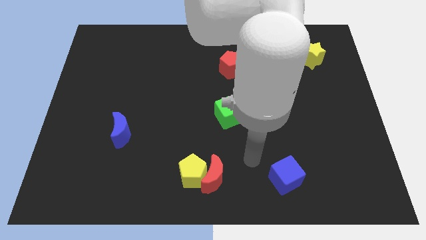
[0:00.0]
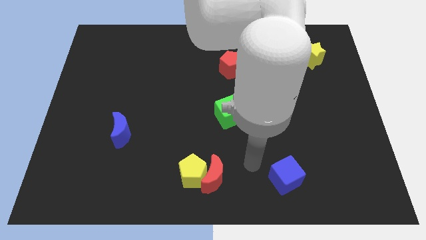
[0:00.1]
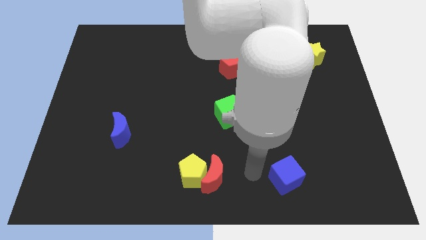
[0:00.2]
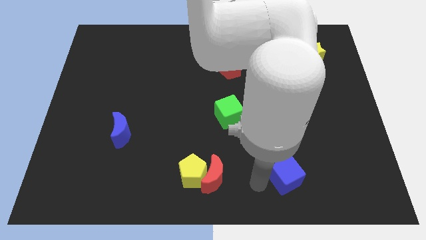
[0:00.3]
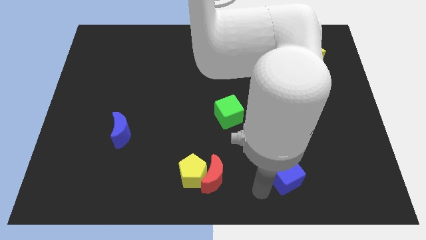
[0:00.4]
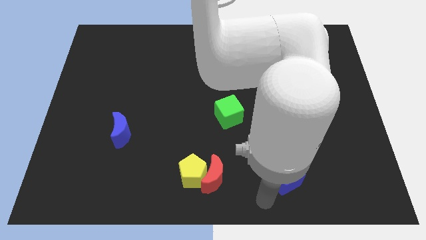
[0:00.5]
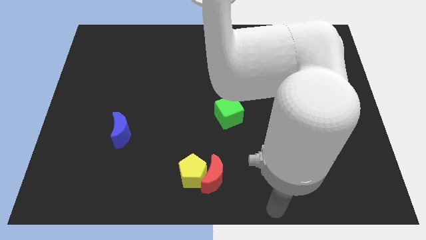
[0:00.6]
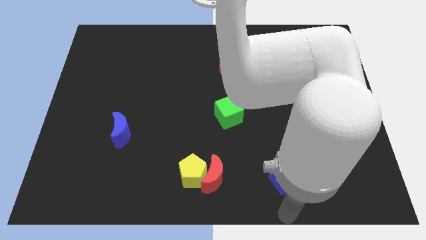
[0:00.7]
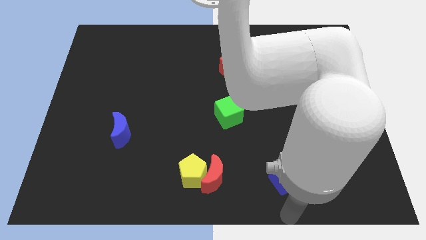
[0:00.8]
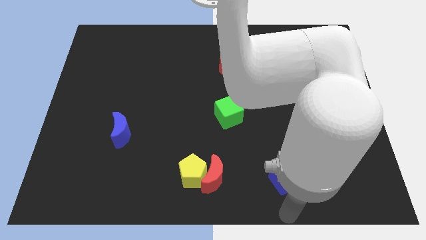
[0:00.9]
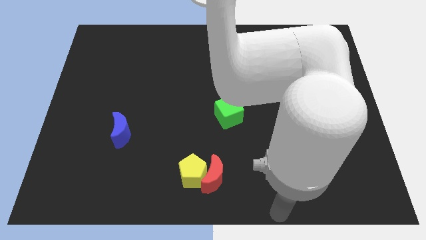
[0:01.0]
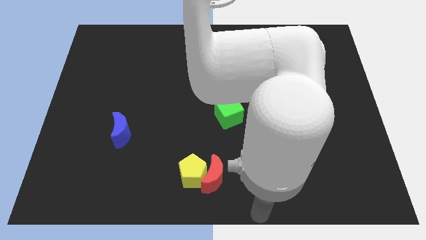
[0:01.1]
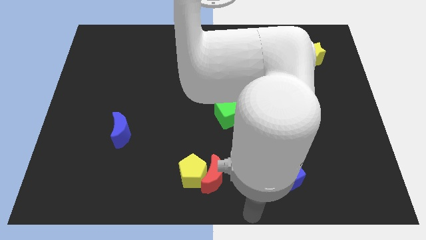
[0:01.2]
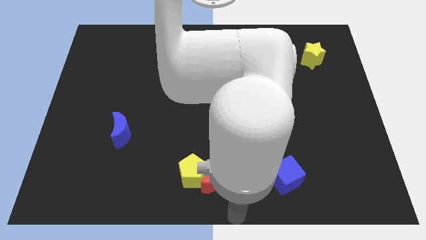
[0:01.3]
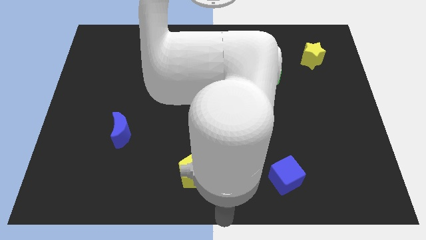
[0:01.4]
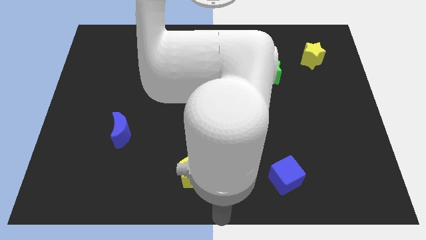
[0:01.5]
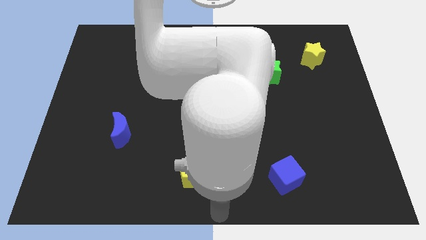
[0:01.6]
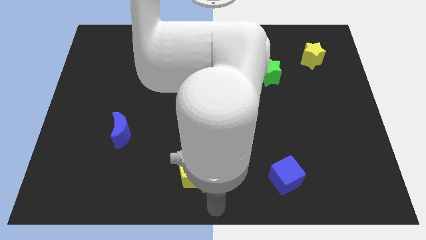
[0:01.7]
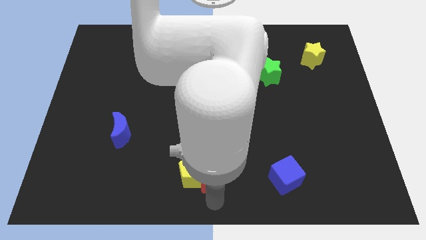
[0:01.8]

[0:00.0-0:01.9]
move your arm towards the red crescent

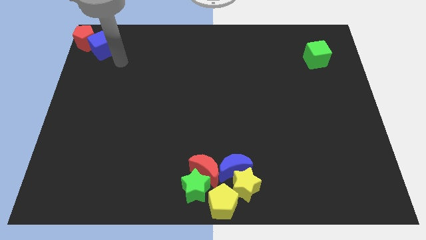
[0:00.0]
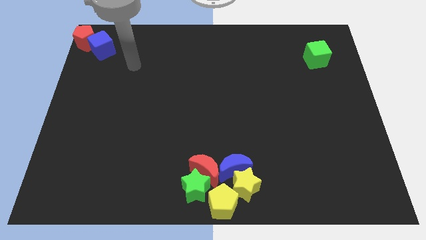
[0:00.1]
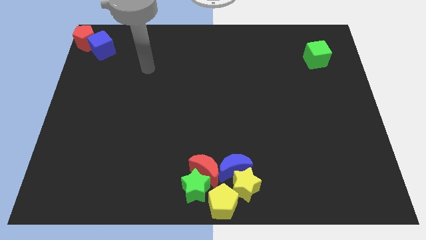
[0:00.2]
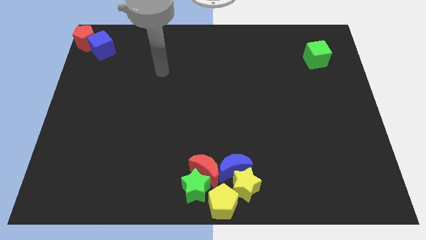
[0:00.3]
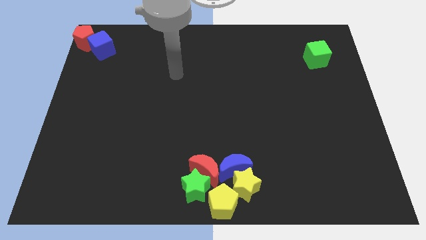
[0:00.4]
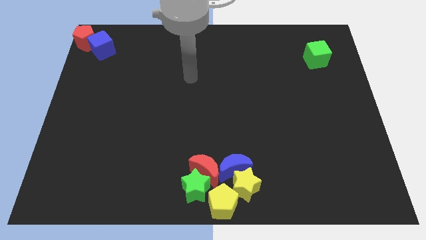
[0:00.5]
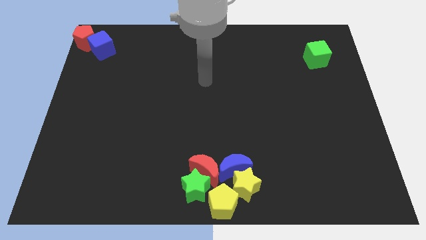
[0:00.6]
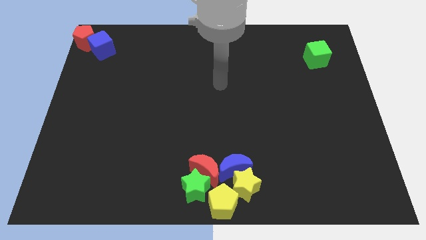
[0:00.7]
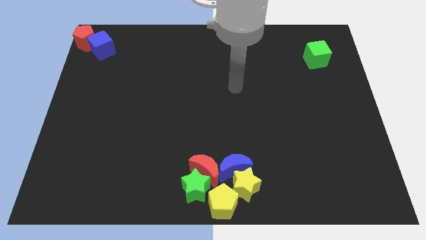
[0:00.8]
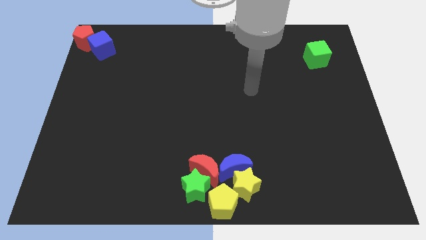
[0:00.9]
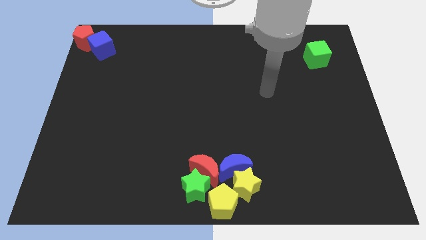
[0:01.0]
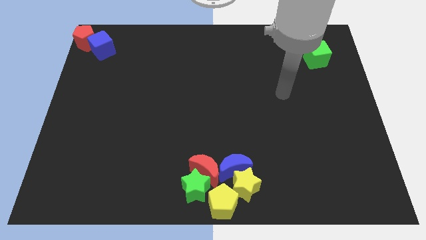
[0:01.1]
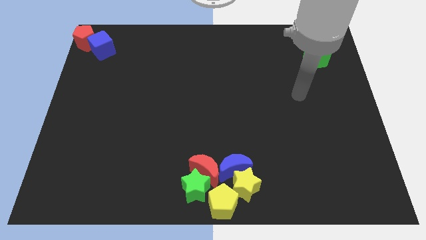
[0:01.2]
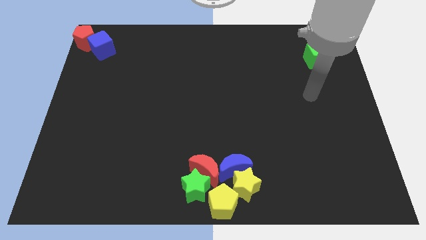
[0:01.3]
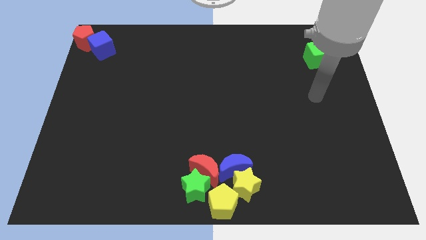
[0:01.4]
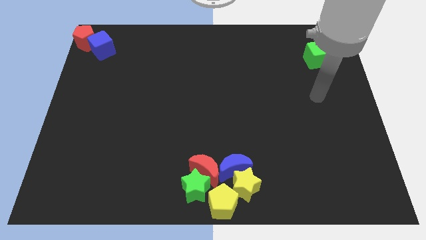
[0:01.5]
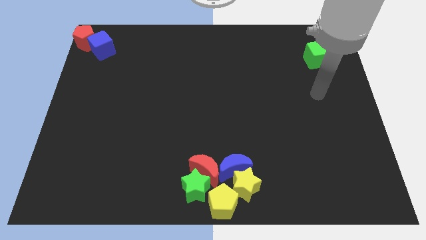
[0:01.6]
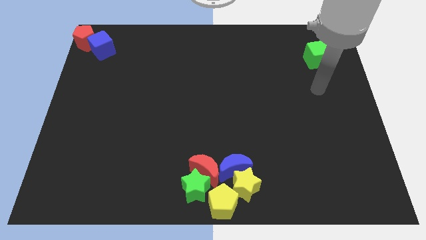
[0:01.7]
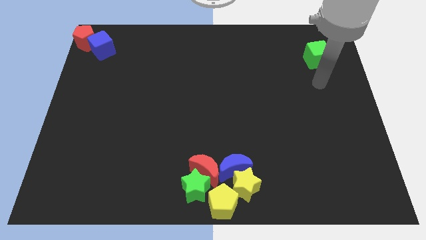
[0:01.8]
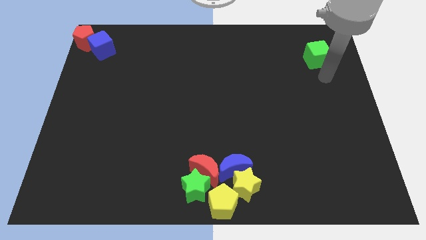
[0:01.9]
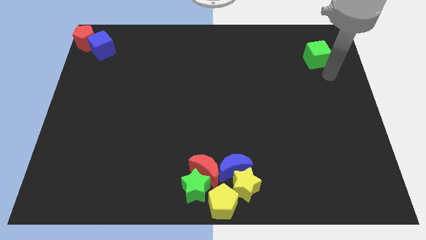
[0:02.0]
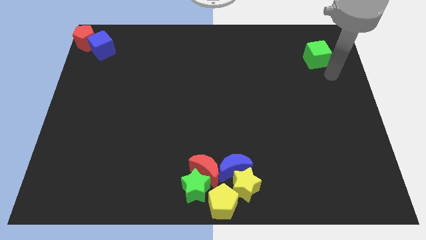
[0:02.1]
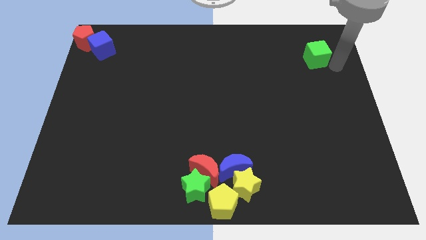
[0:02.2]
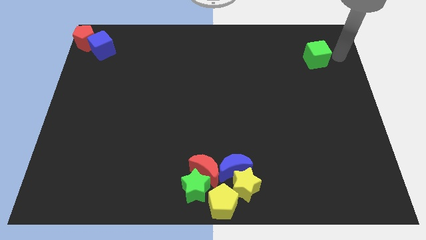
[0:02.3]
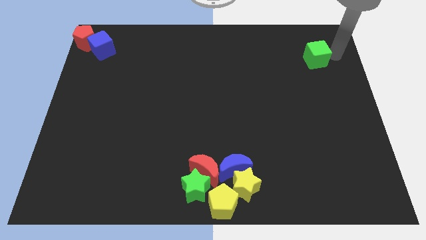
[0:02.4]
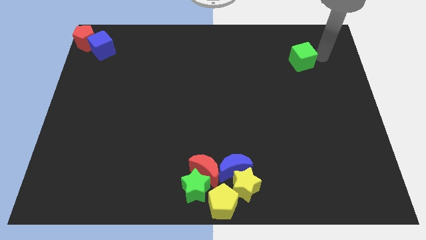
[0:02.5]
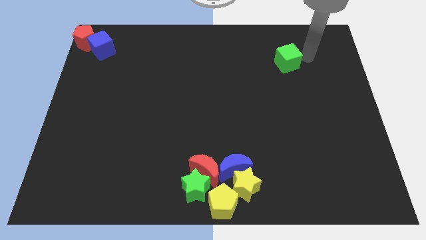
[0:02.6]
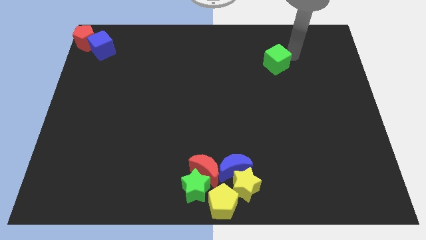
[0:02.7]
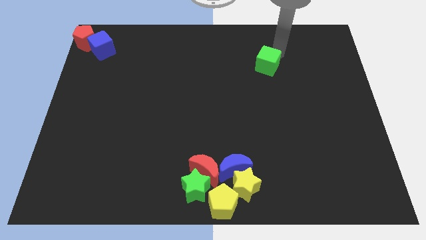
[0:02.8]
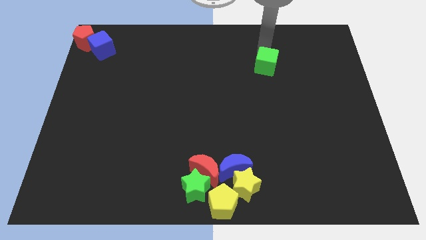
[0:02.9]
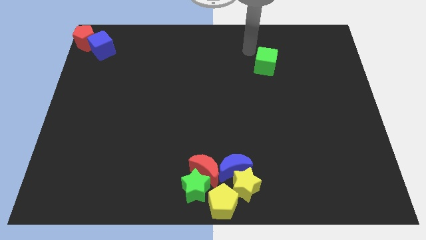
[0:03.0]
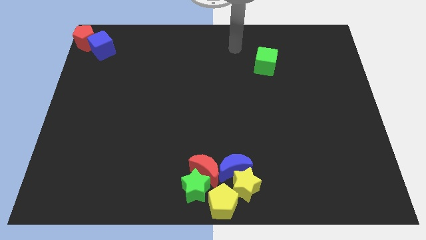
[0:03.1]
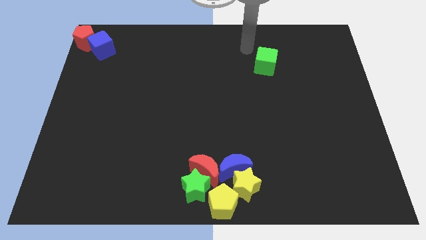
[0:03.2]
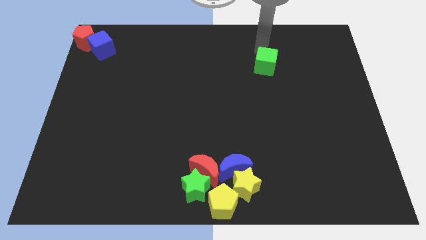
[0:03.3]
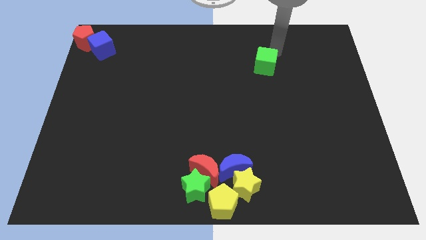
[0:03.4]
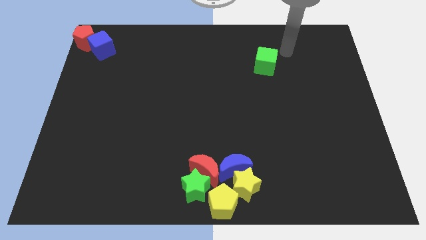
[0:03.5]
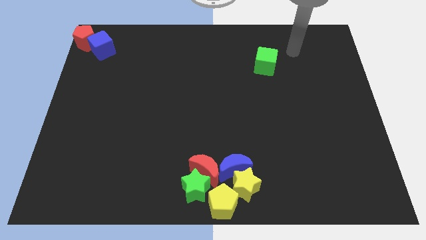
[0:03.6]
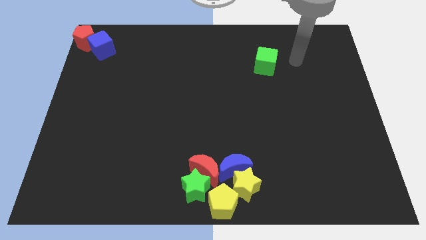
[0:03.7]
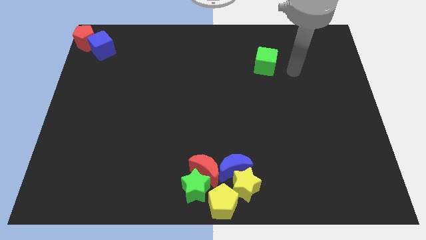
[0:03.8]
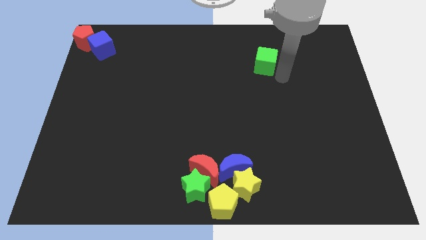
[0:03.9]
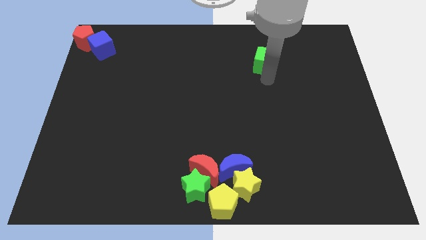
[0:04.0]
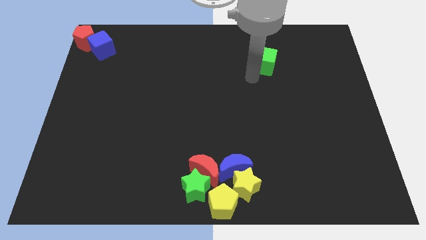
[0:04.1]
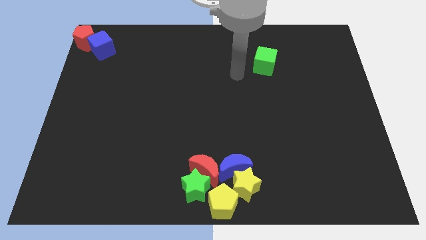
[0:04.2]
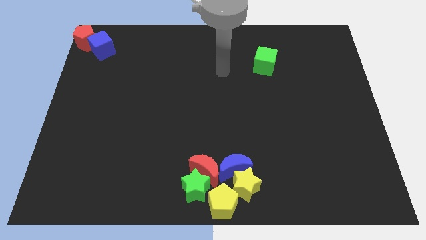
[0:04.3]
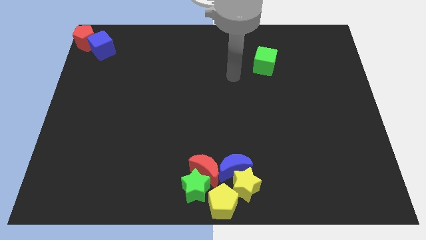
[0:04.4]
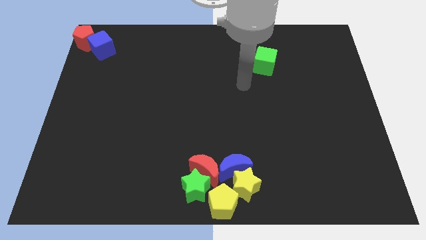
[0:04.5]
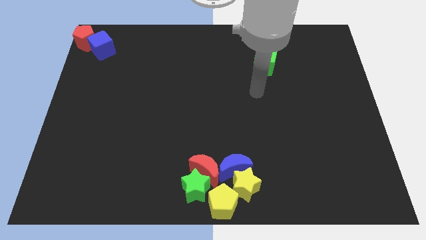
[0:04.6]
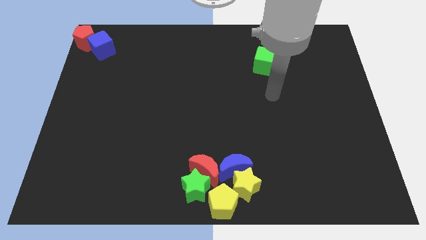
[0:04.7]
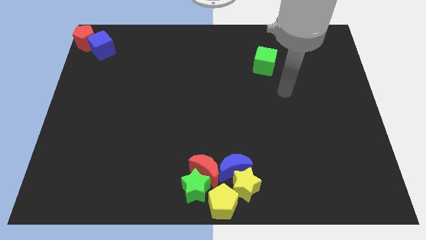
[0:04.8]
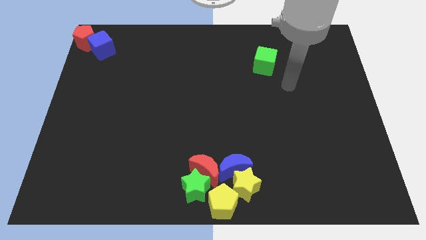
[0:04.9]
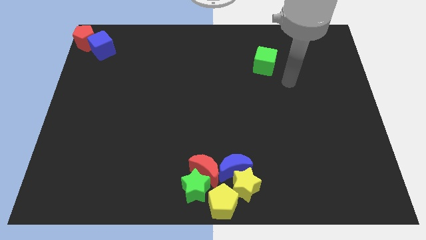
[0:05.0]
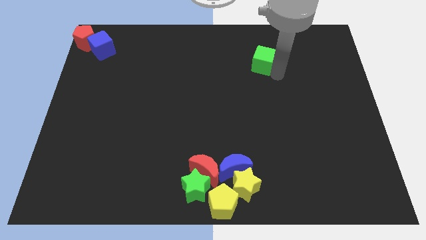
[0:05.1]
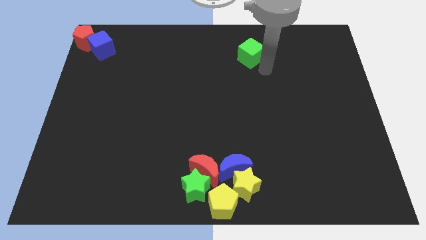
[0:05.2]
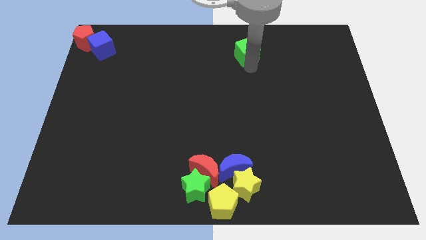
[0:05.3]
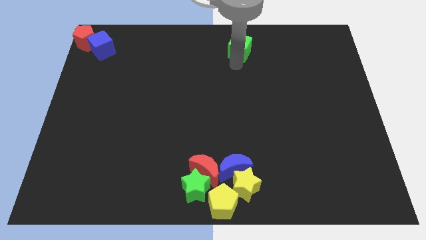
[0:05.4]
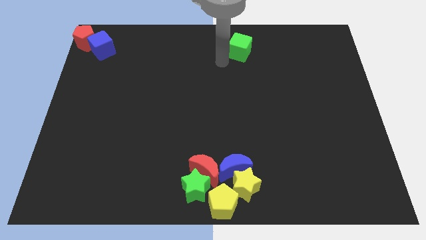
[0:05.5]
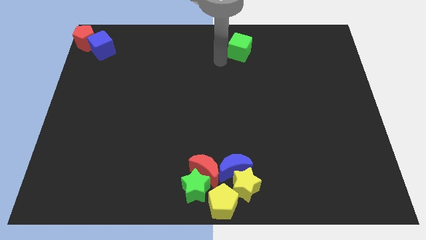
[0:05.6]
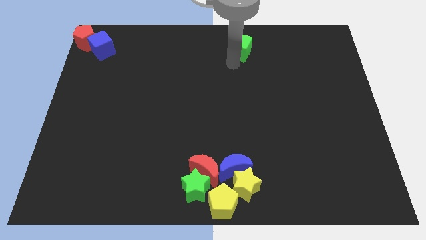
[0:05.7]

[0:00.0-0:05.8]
place the green cube above the blue crescent

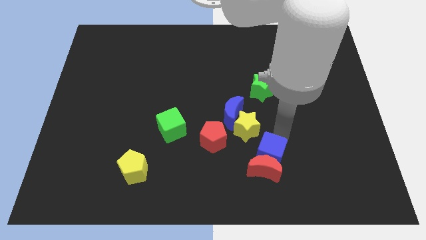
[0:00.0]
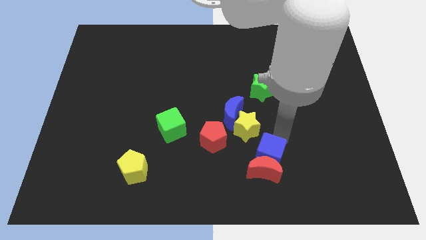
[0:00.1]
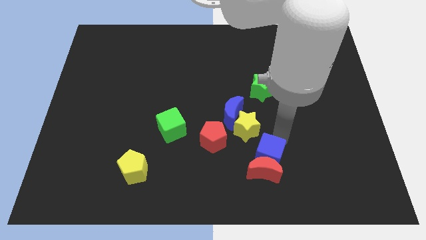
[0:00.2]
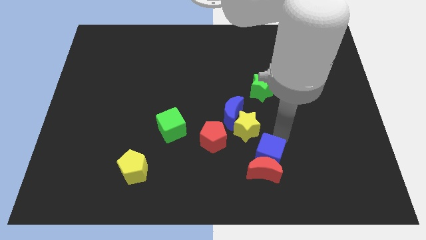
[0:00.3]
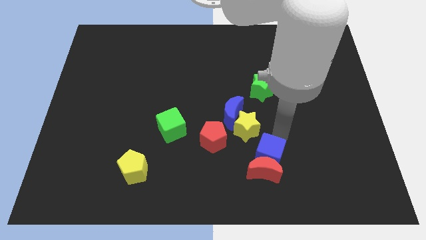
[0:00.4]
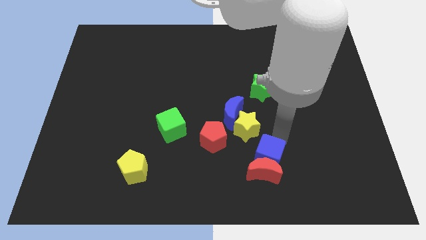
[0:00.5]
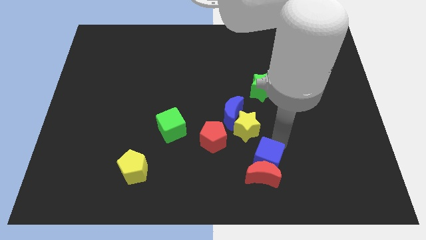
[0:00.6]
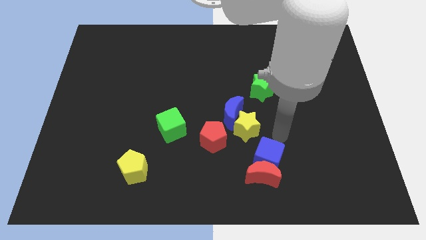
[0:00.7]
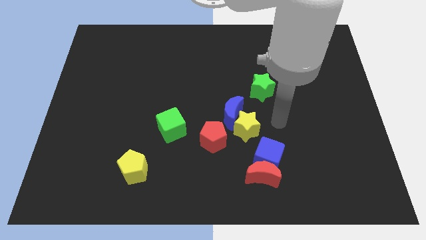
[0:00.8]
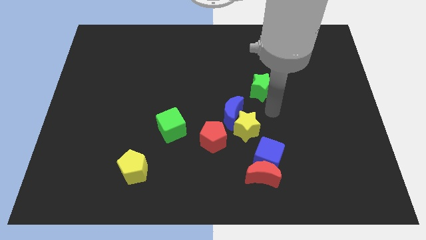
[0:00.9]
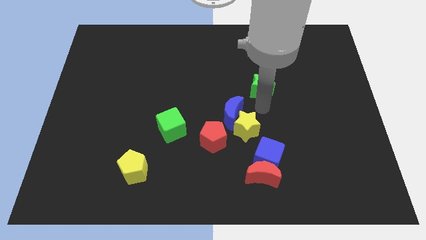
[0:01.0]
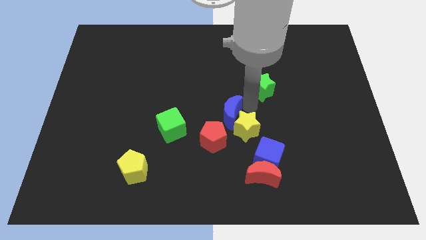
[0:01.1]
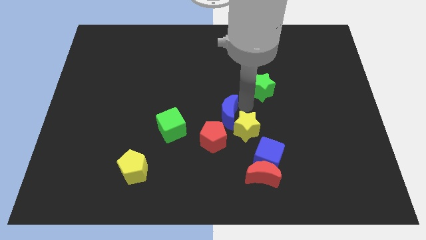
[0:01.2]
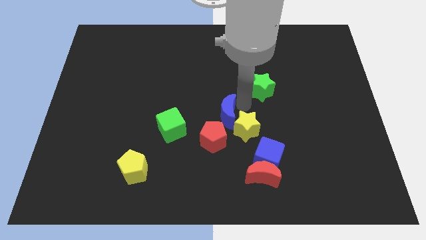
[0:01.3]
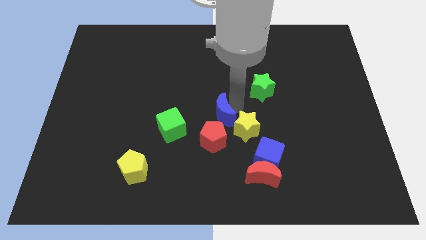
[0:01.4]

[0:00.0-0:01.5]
move your arm away from blue cube
